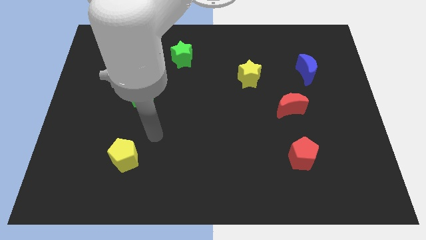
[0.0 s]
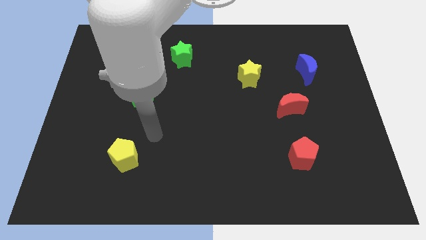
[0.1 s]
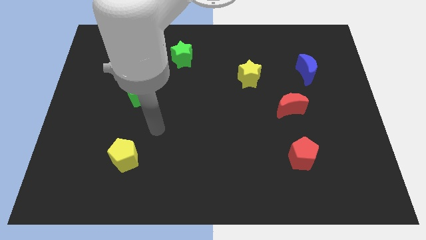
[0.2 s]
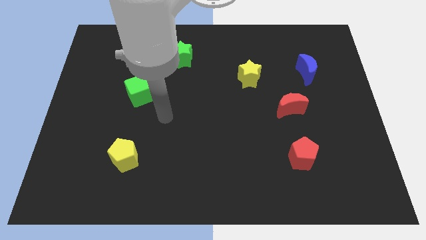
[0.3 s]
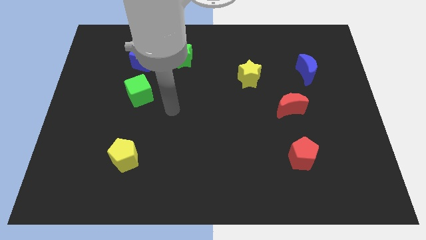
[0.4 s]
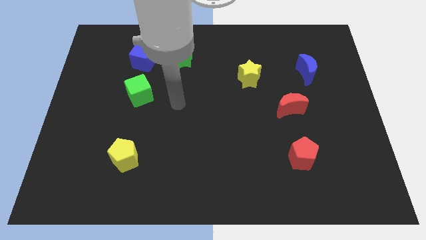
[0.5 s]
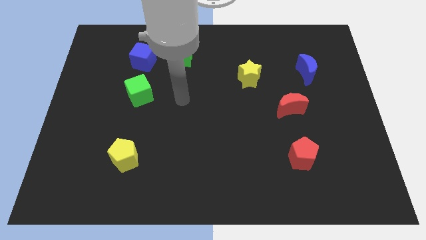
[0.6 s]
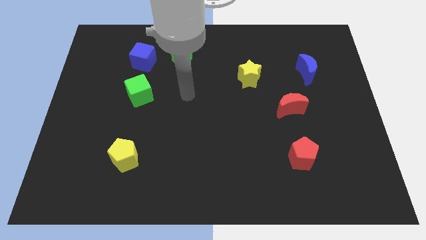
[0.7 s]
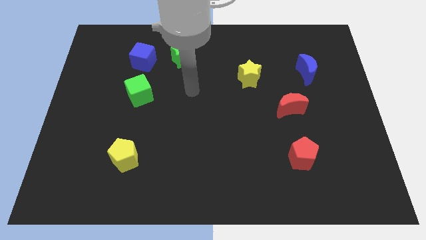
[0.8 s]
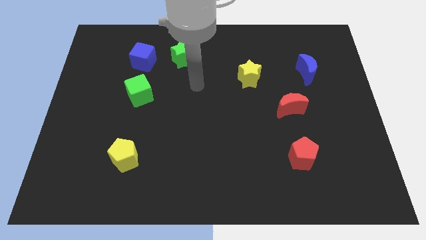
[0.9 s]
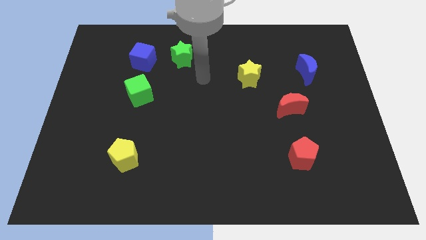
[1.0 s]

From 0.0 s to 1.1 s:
move the pointer away from the yellow pentagon

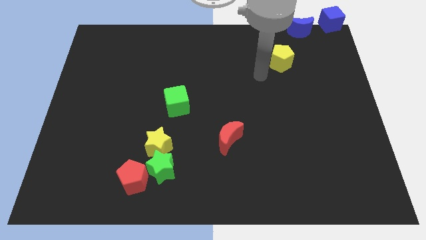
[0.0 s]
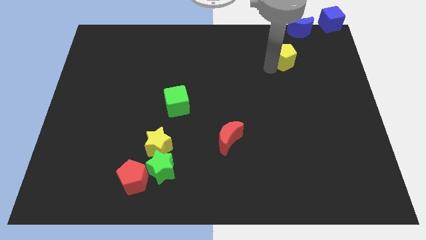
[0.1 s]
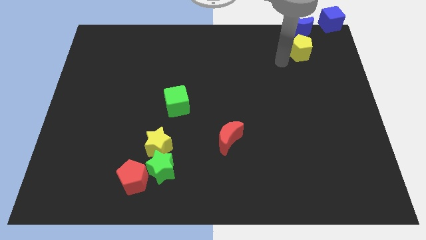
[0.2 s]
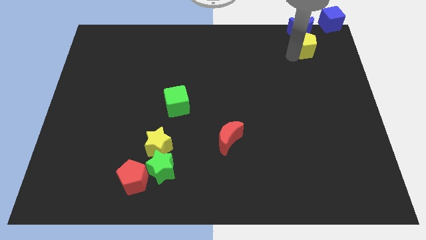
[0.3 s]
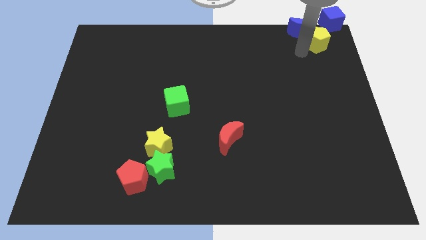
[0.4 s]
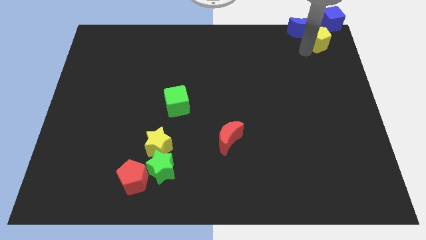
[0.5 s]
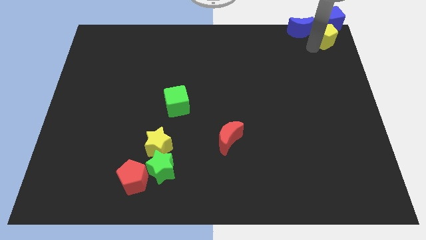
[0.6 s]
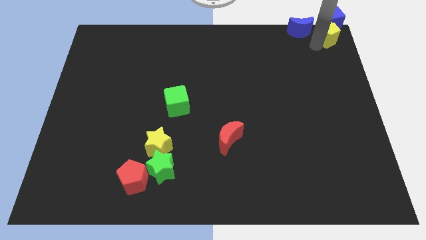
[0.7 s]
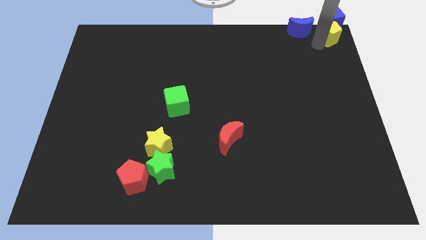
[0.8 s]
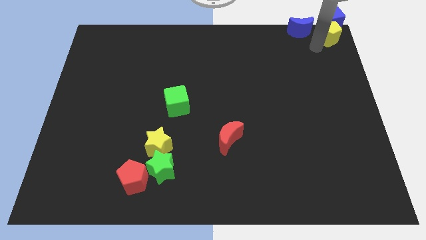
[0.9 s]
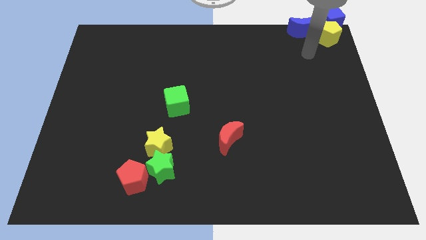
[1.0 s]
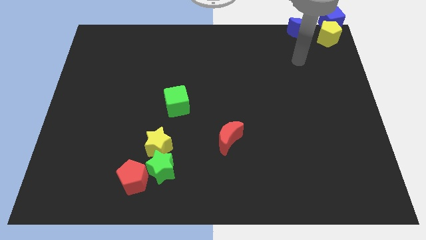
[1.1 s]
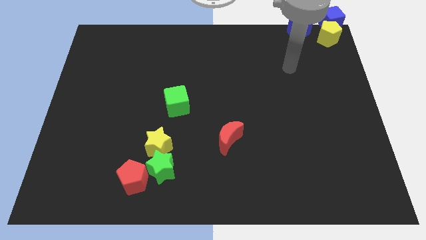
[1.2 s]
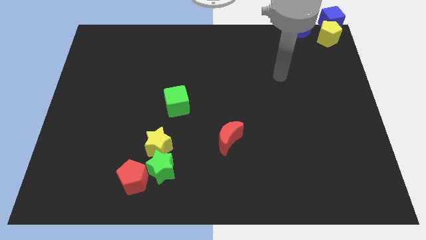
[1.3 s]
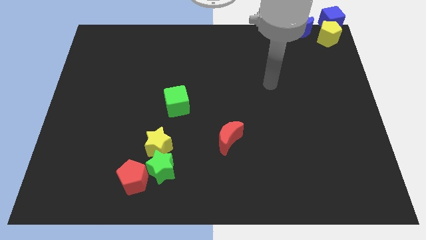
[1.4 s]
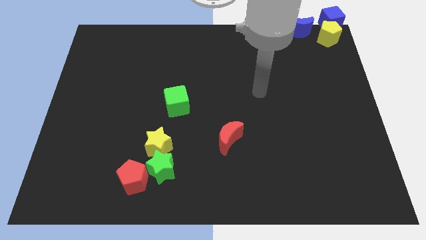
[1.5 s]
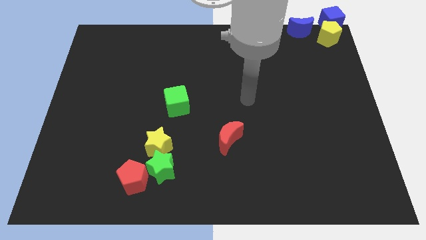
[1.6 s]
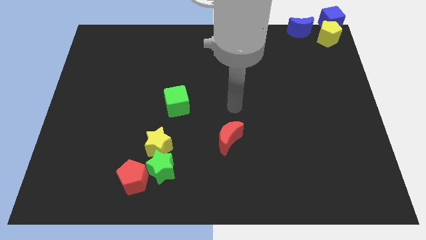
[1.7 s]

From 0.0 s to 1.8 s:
push the yellow pentagon close to the blue cube

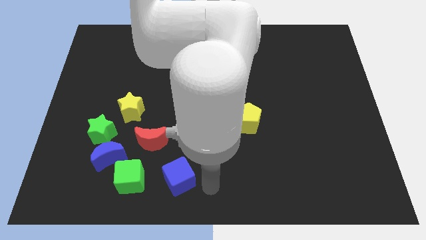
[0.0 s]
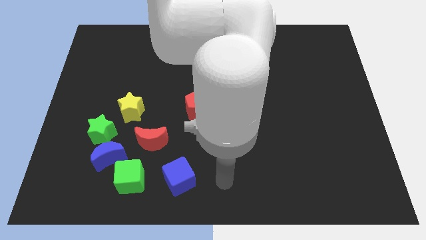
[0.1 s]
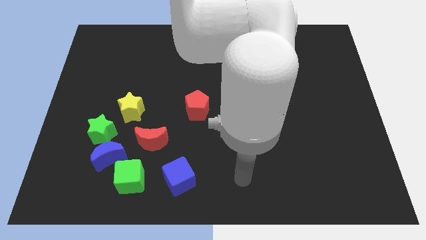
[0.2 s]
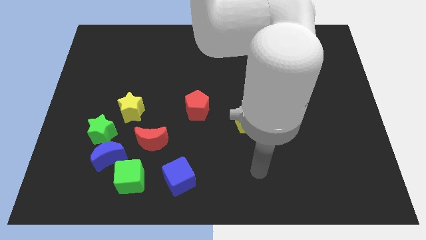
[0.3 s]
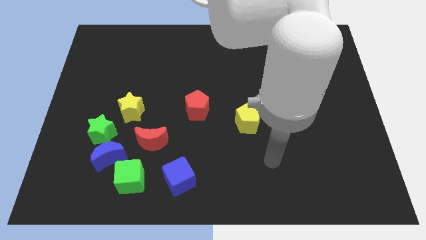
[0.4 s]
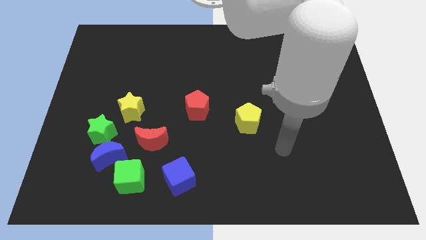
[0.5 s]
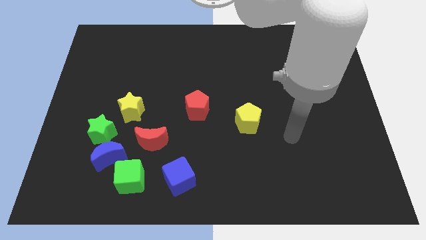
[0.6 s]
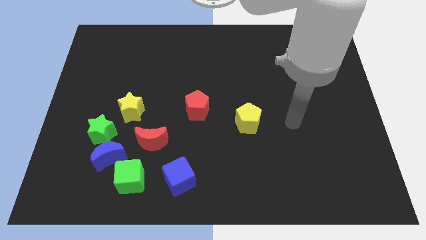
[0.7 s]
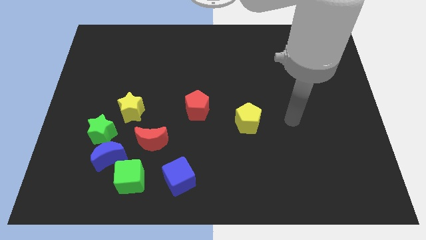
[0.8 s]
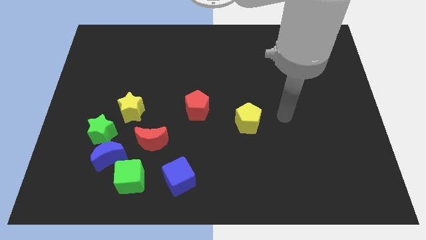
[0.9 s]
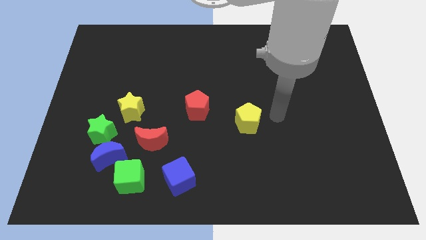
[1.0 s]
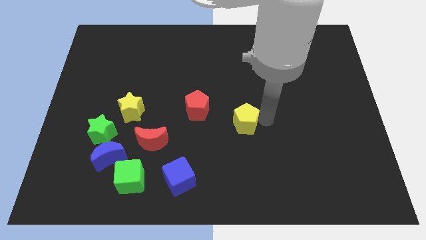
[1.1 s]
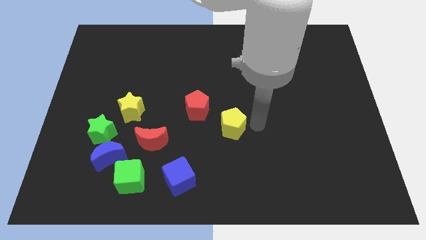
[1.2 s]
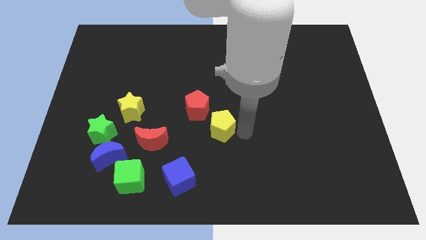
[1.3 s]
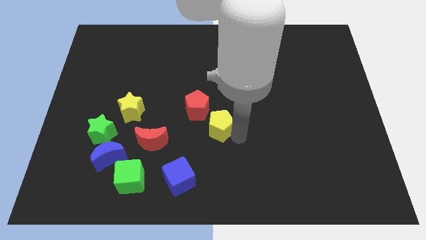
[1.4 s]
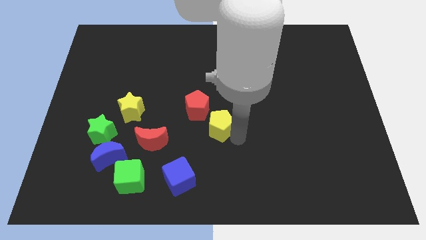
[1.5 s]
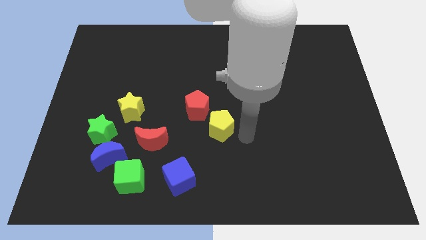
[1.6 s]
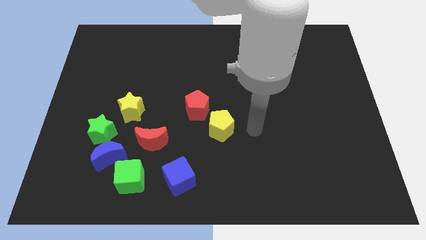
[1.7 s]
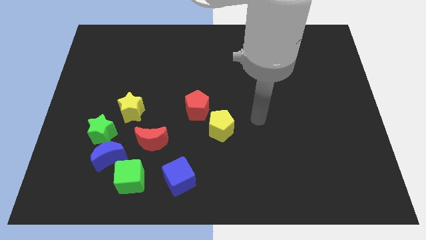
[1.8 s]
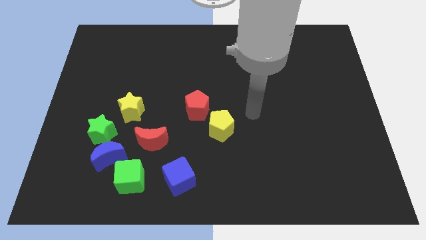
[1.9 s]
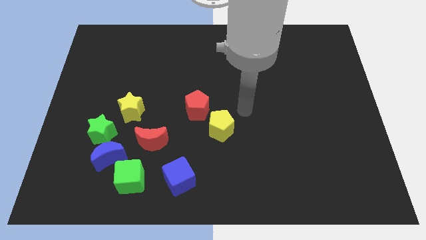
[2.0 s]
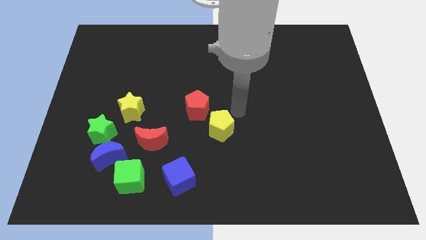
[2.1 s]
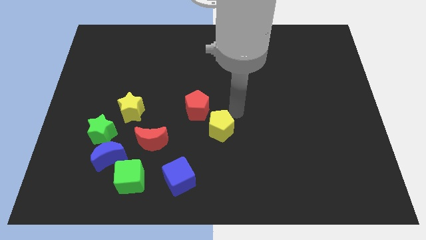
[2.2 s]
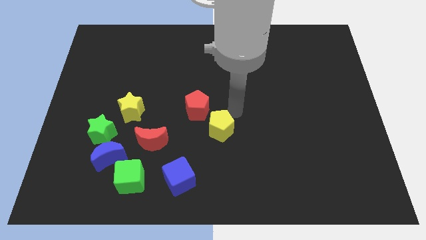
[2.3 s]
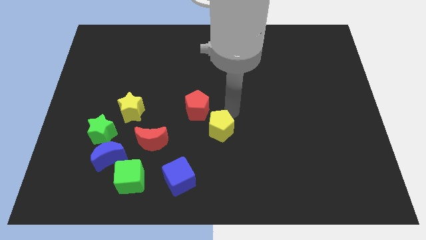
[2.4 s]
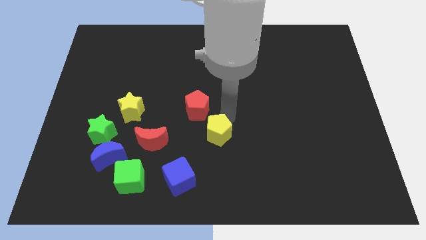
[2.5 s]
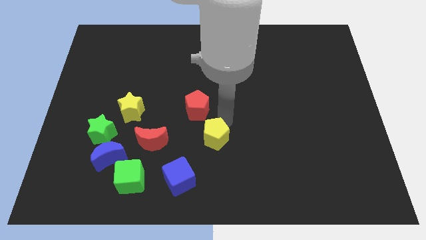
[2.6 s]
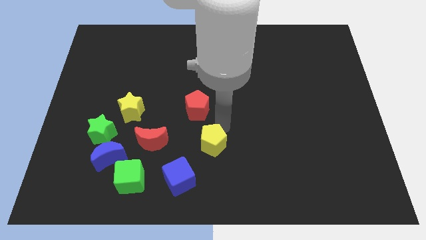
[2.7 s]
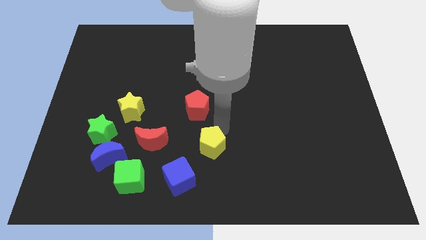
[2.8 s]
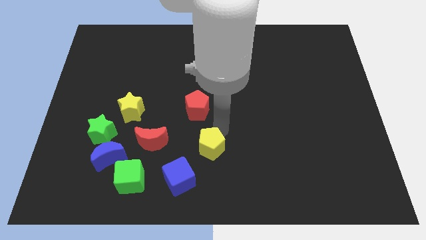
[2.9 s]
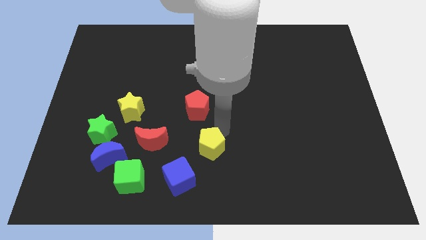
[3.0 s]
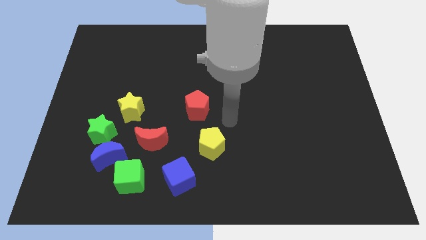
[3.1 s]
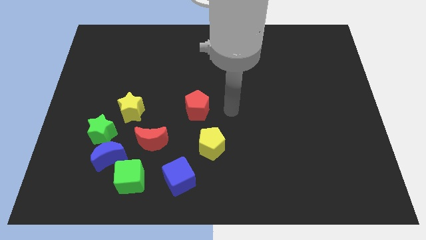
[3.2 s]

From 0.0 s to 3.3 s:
place the yellow pentagon parallel at the right side of the red crescent

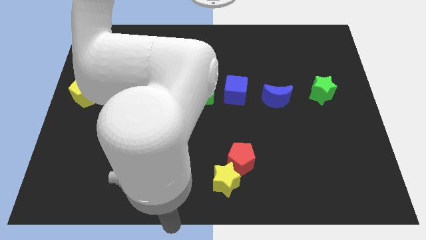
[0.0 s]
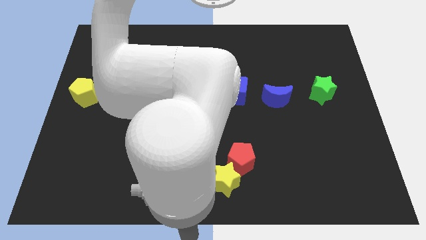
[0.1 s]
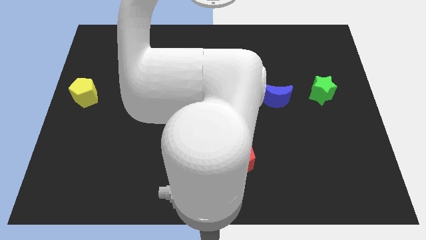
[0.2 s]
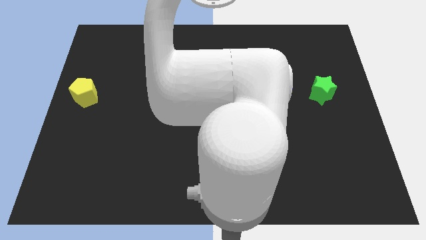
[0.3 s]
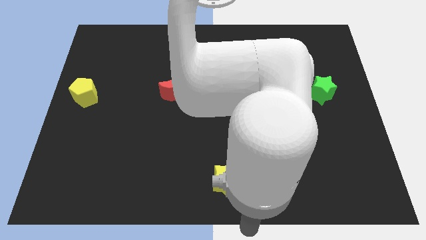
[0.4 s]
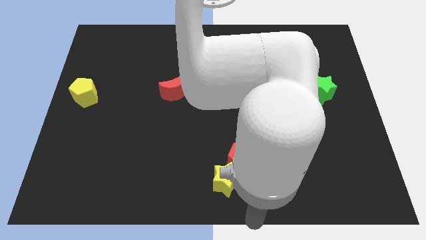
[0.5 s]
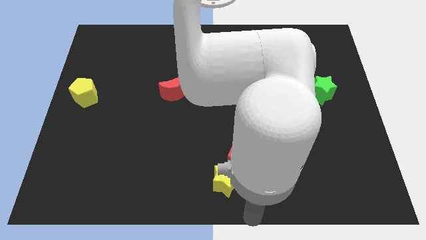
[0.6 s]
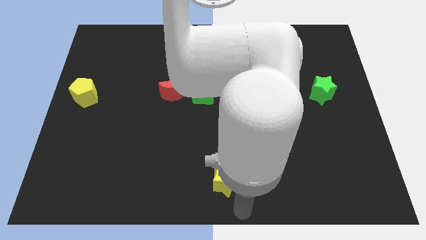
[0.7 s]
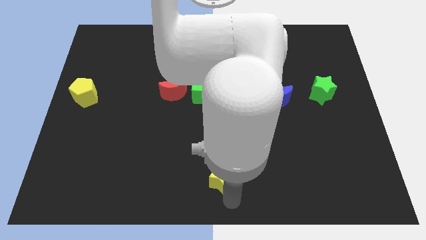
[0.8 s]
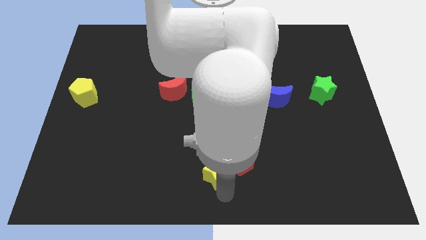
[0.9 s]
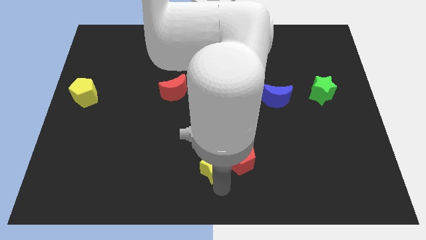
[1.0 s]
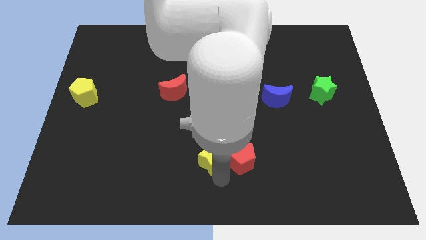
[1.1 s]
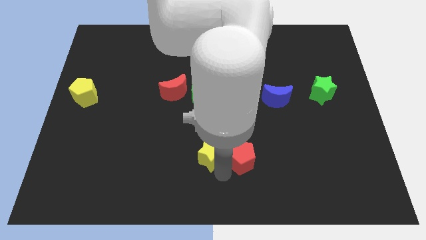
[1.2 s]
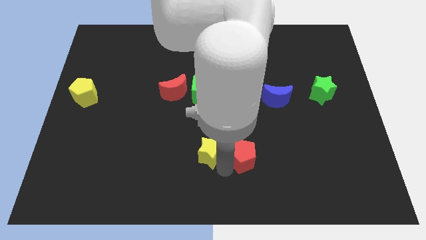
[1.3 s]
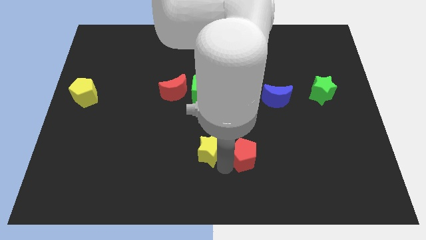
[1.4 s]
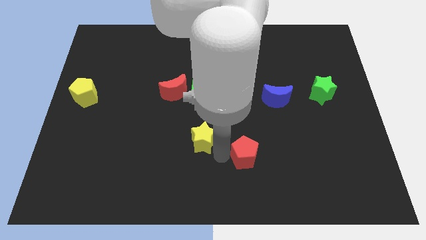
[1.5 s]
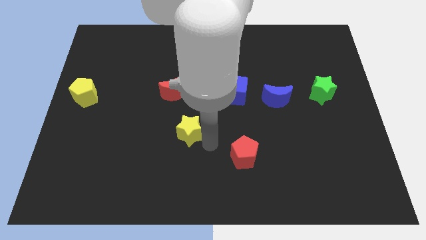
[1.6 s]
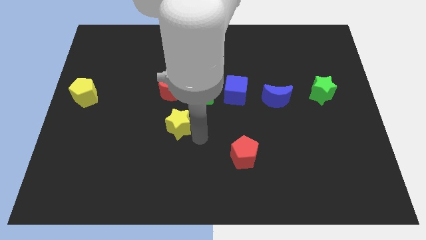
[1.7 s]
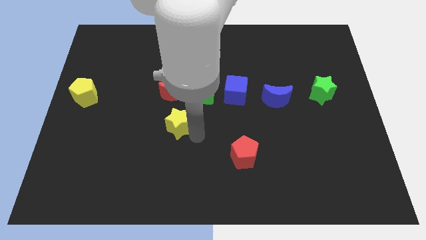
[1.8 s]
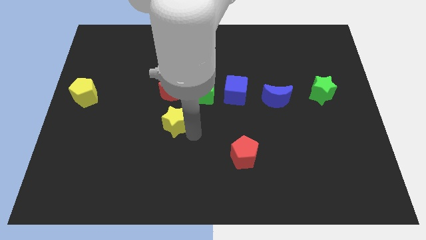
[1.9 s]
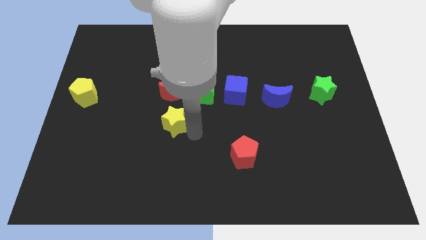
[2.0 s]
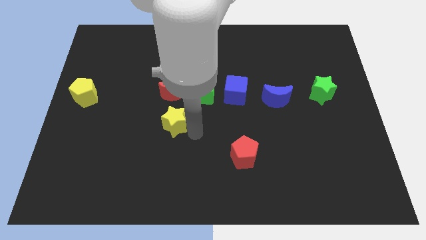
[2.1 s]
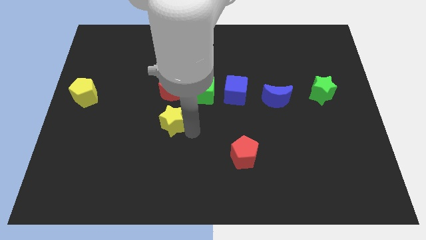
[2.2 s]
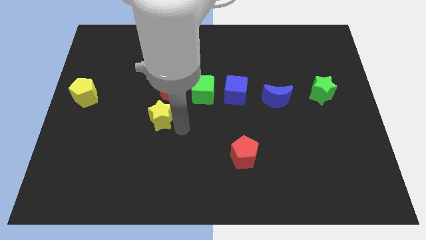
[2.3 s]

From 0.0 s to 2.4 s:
place the yellow star down to the red moon

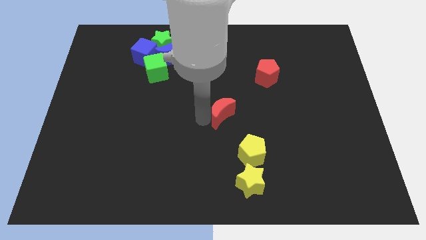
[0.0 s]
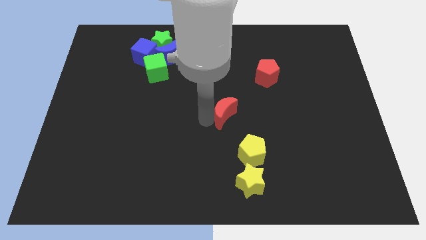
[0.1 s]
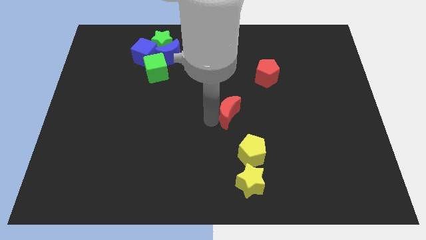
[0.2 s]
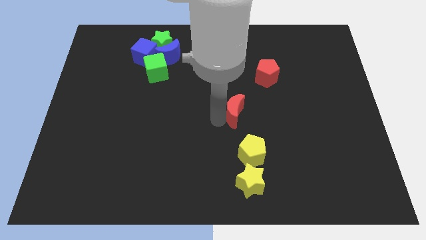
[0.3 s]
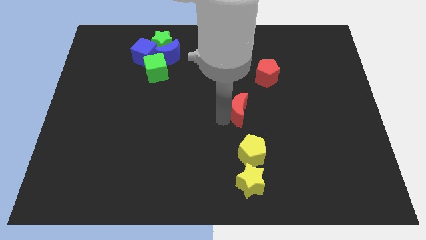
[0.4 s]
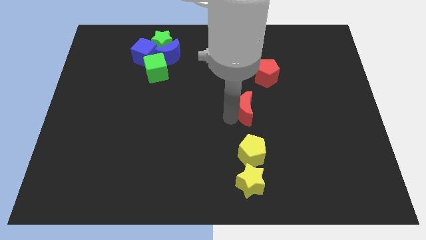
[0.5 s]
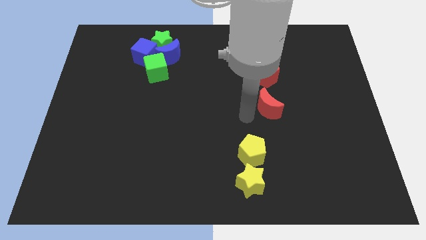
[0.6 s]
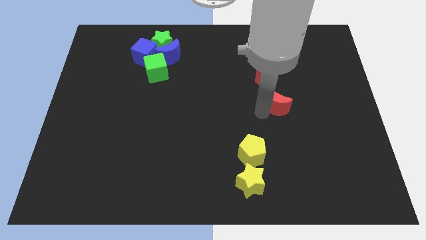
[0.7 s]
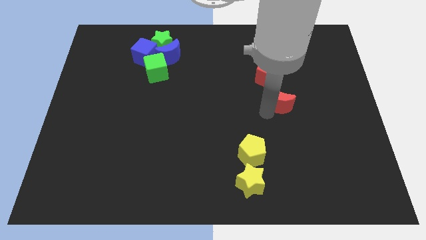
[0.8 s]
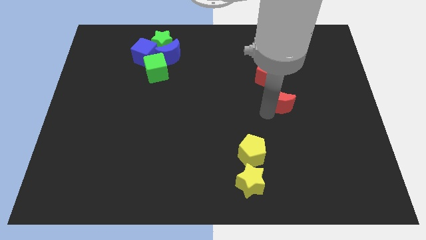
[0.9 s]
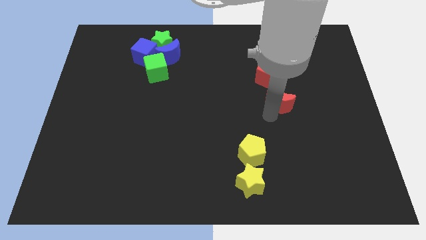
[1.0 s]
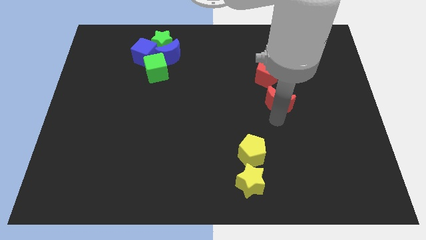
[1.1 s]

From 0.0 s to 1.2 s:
put the red moon below the red pentagon
